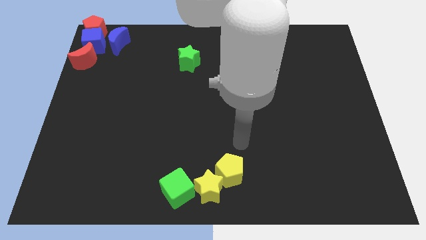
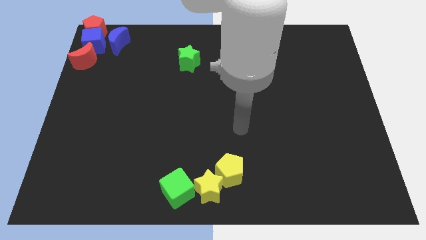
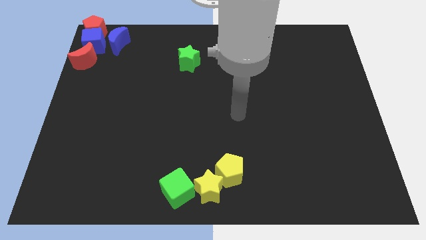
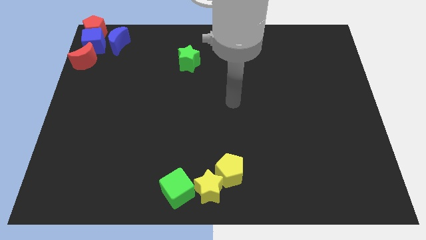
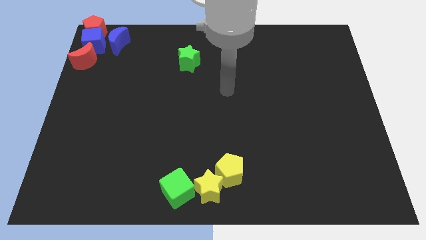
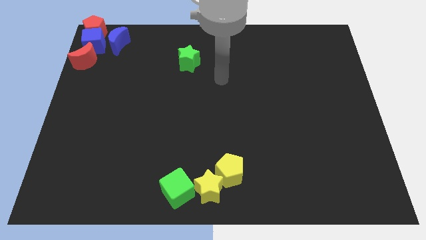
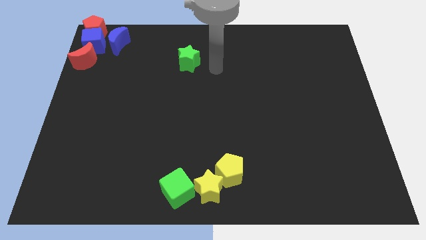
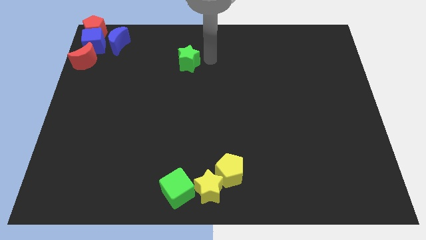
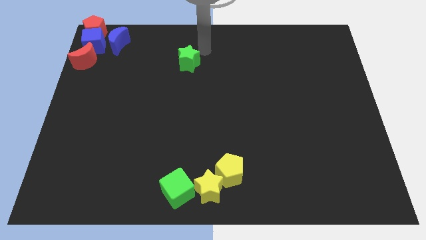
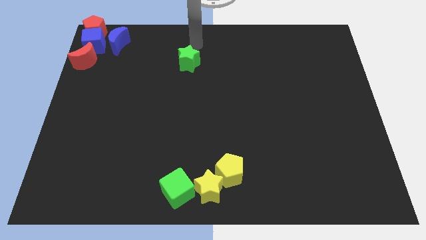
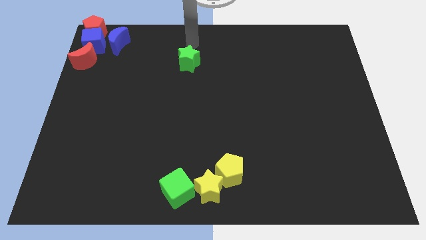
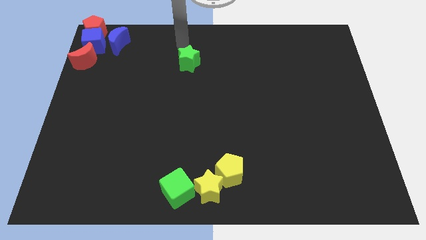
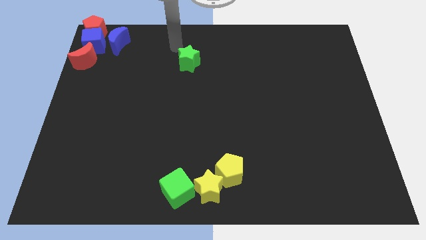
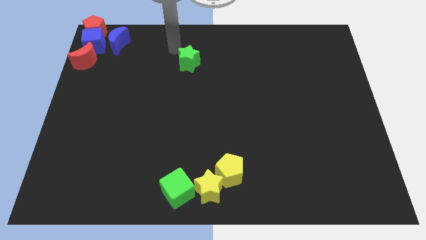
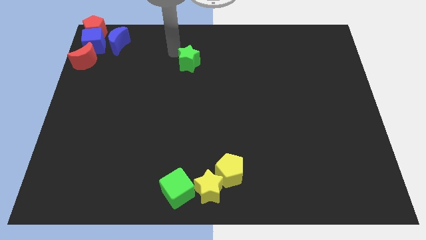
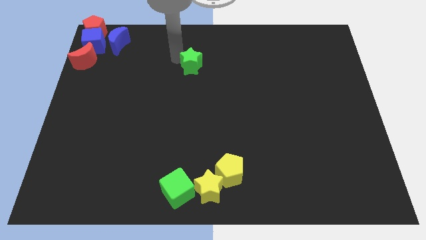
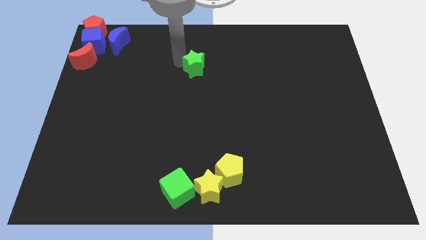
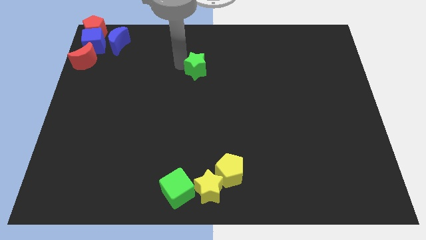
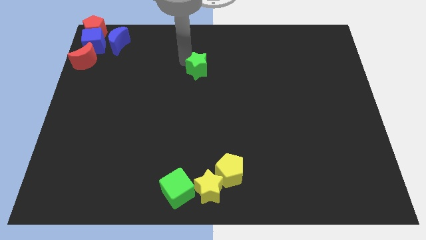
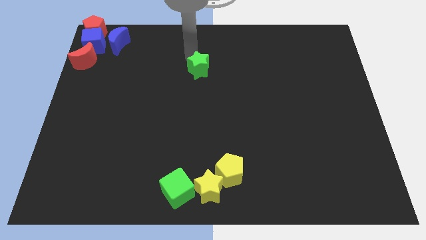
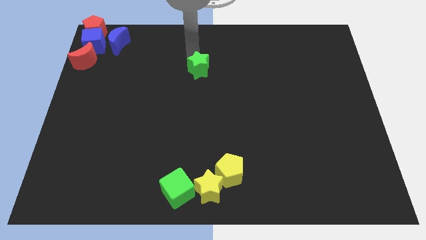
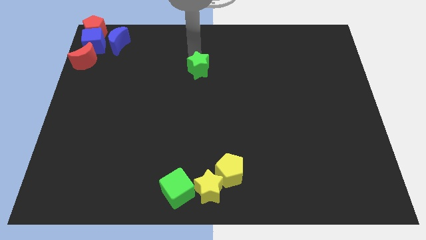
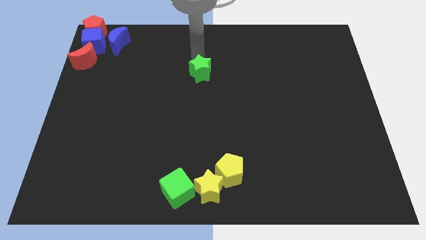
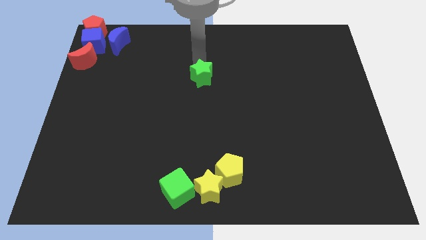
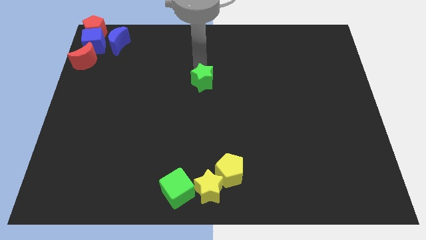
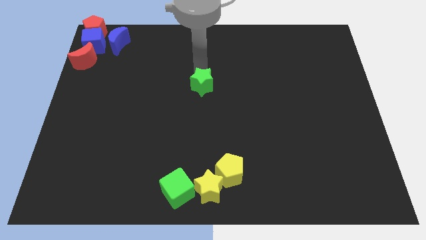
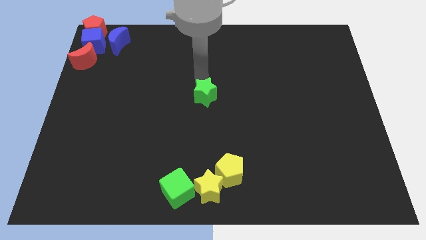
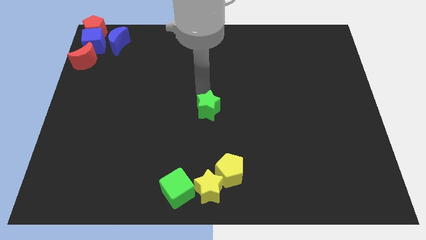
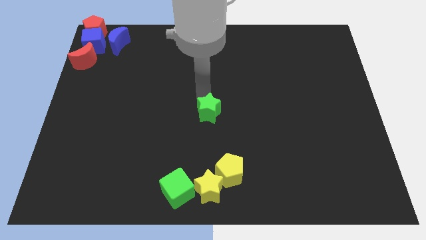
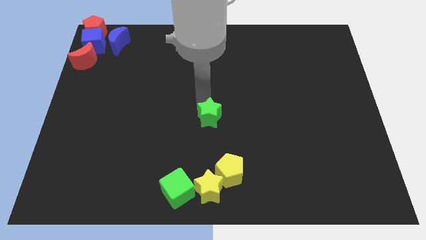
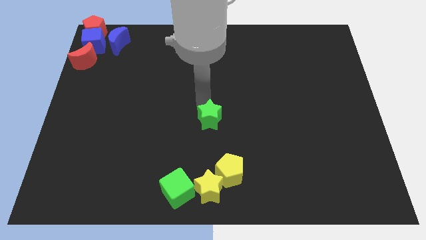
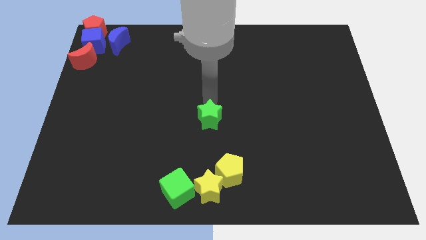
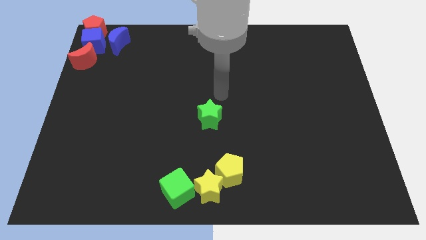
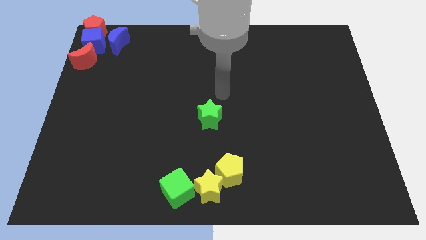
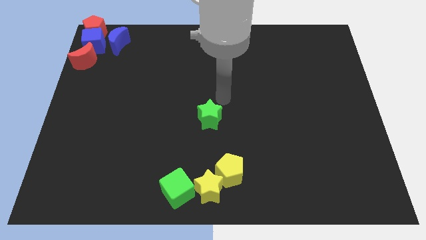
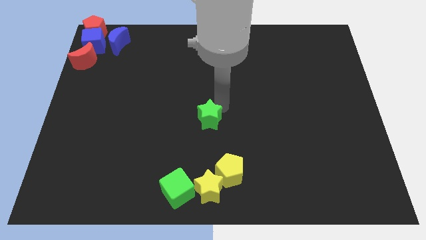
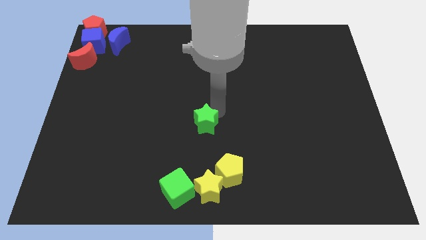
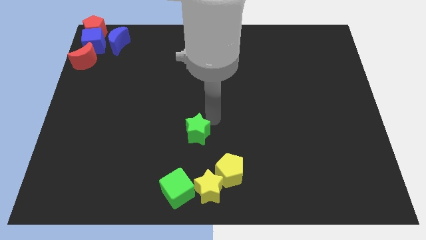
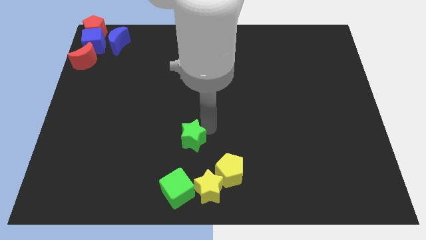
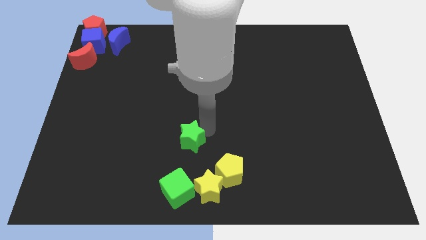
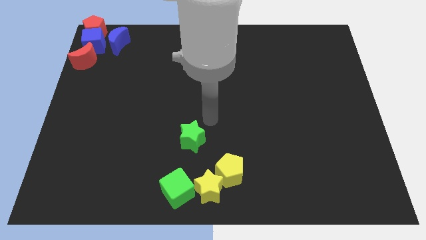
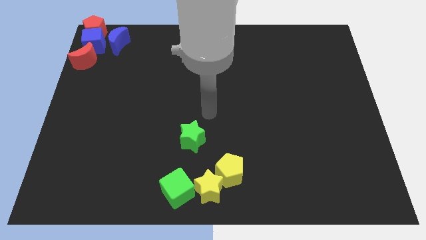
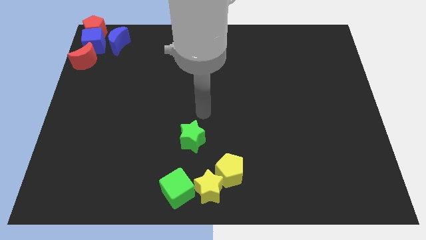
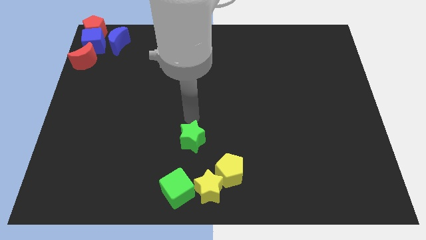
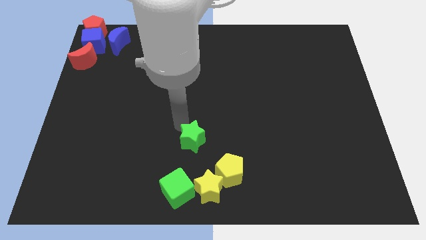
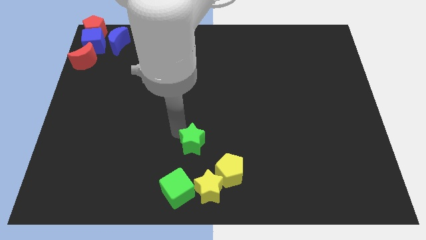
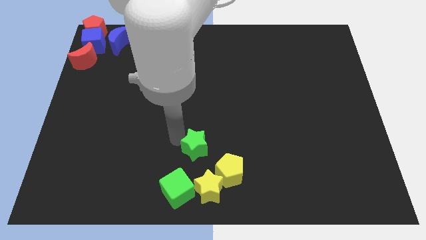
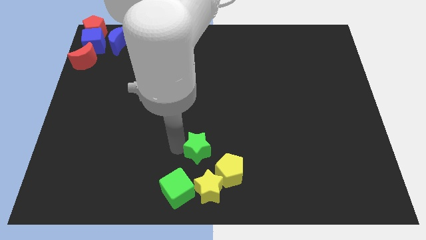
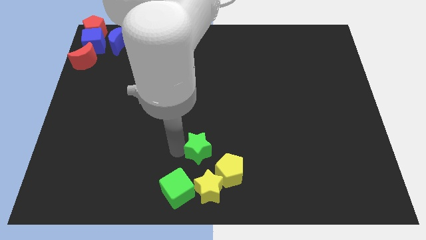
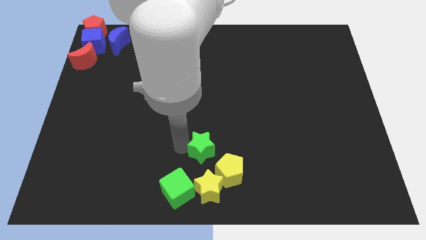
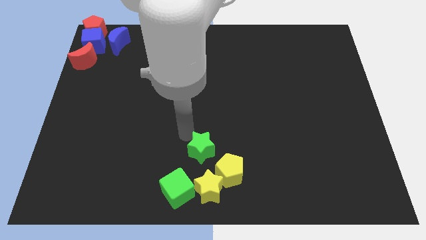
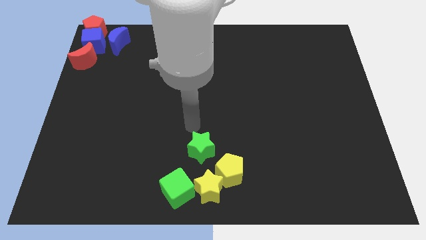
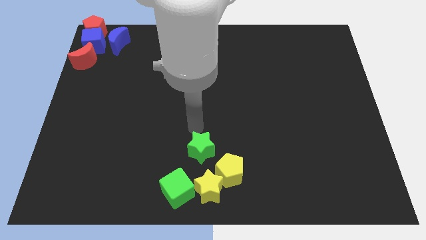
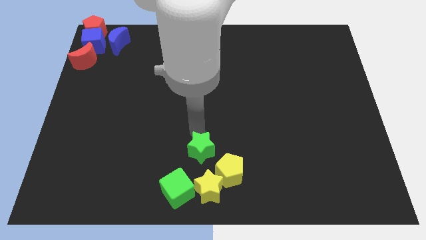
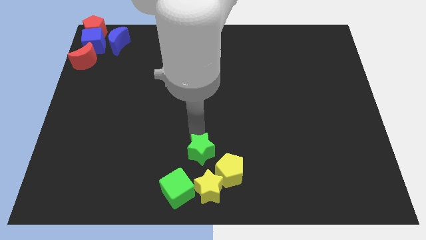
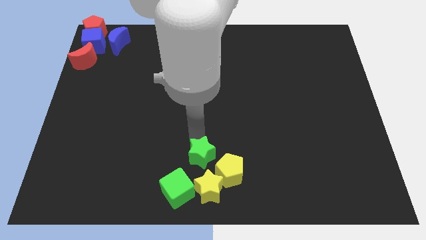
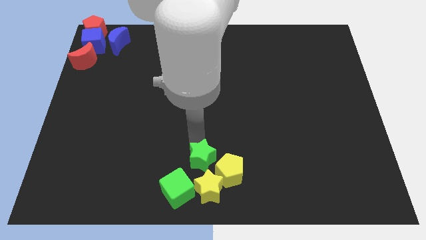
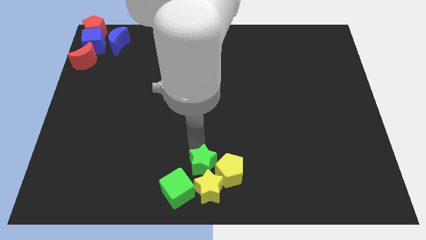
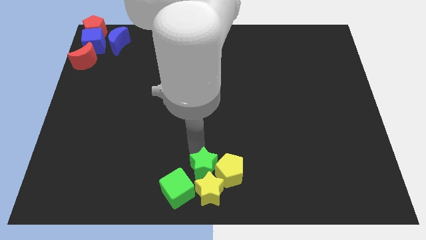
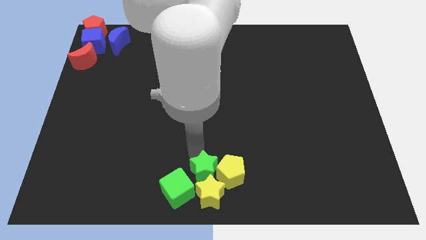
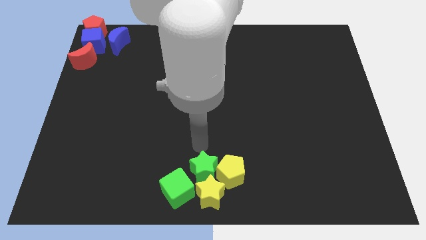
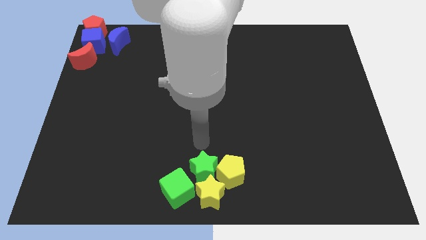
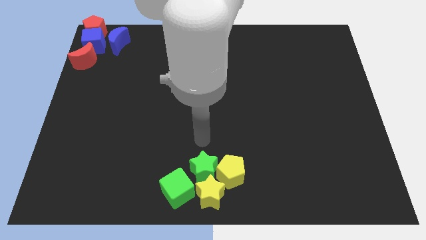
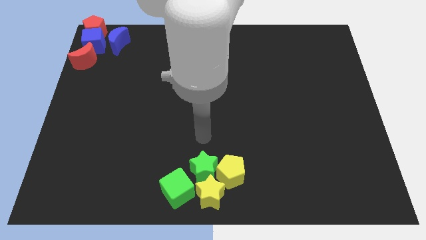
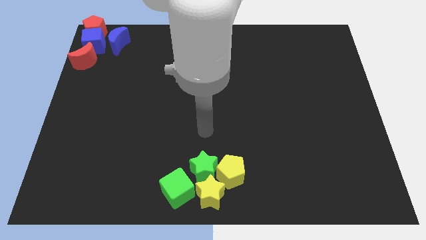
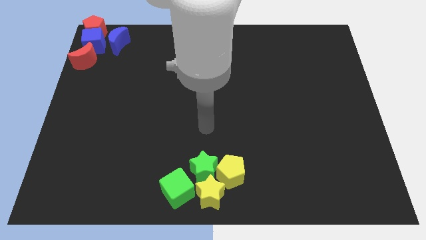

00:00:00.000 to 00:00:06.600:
move the green star to the top of the yellow star

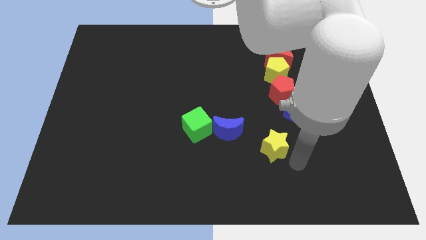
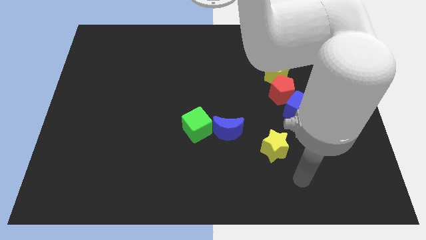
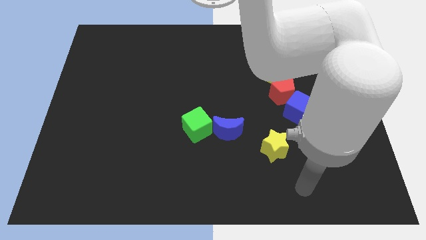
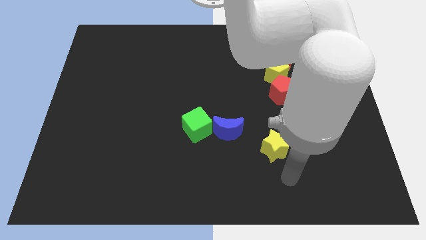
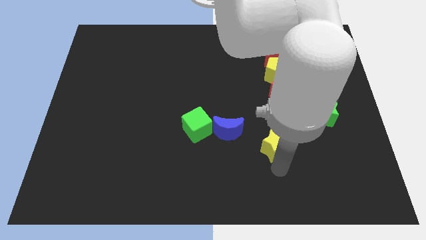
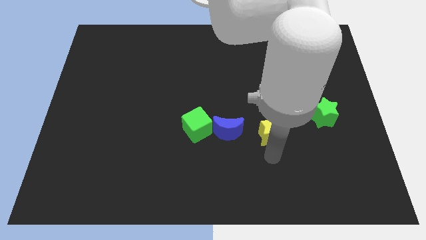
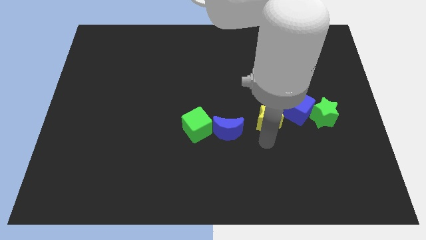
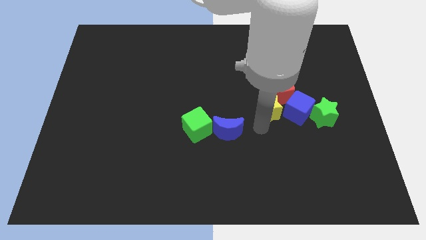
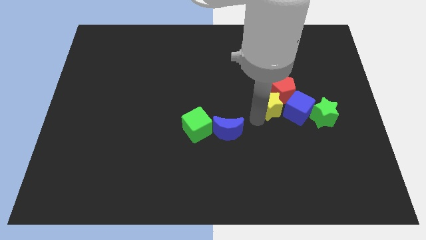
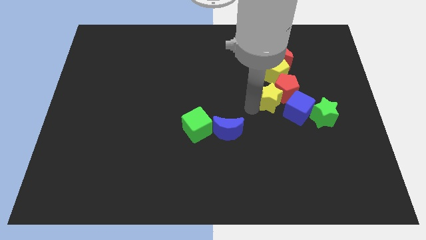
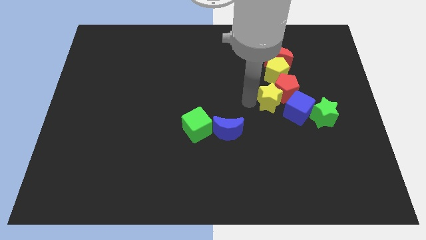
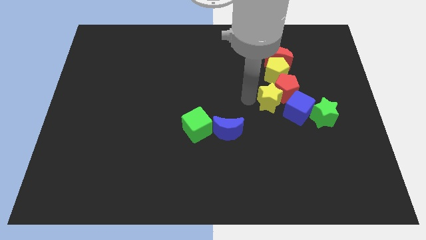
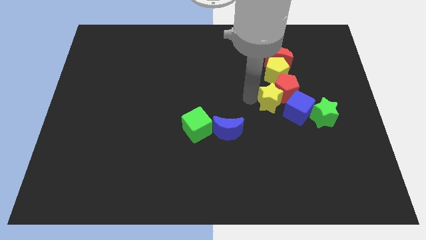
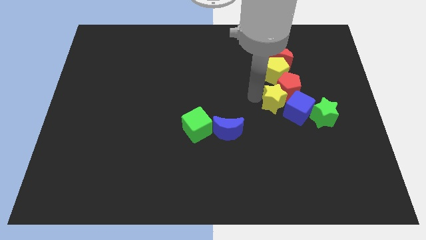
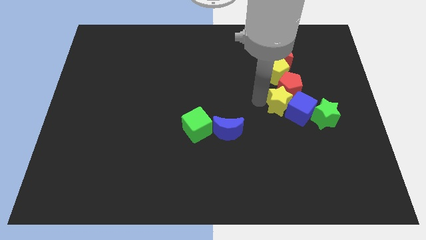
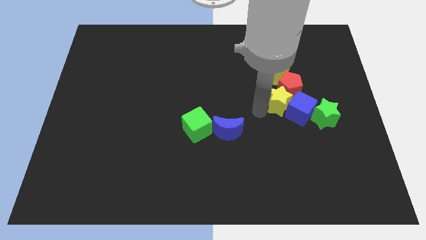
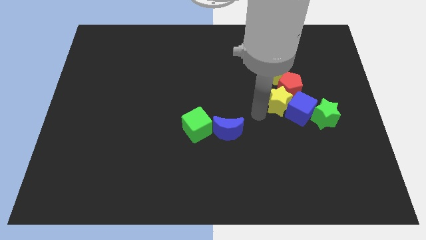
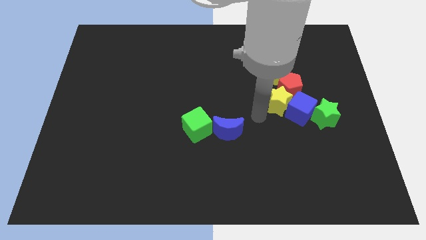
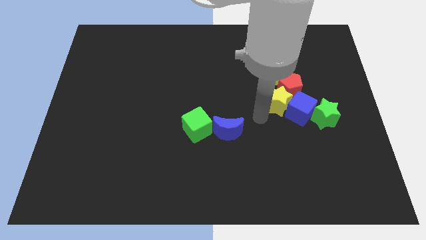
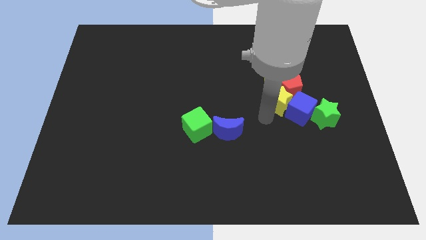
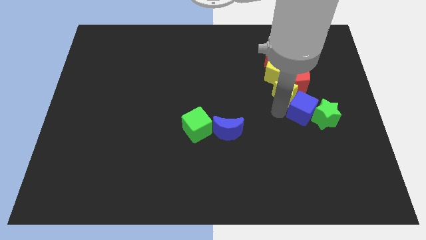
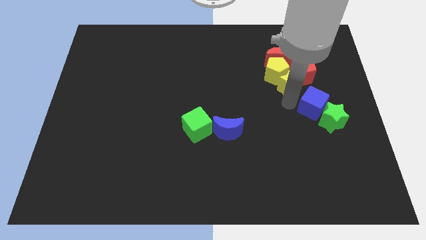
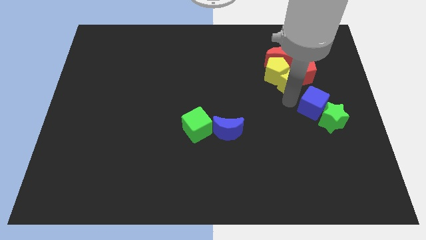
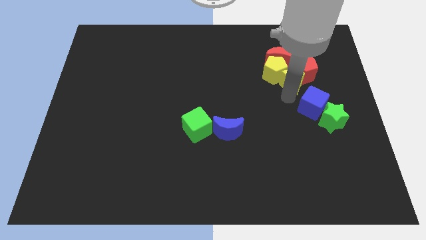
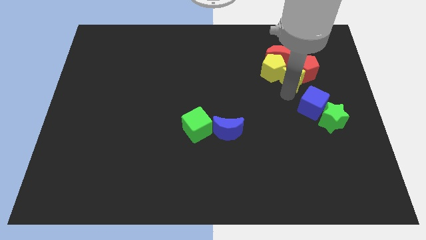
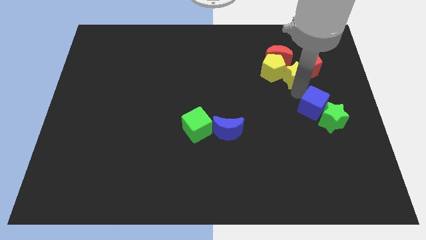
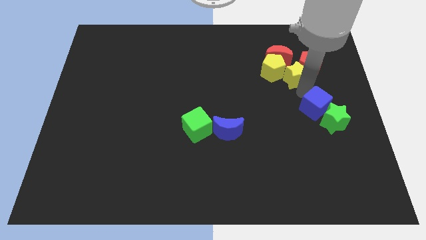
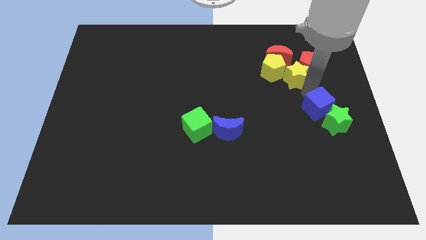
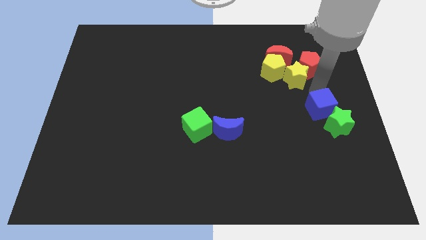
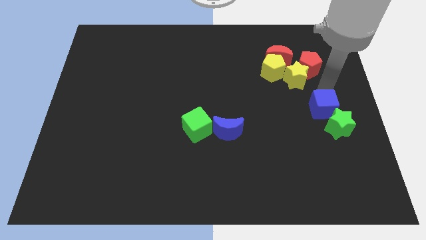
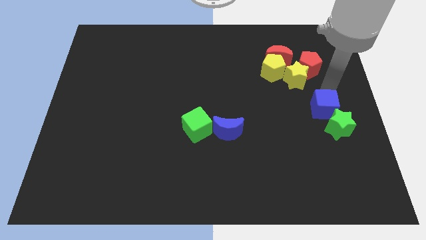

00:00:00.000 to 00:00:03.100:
push the yellow star into the red pentagon
